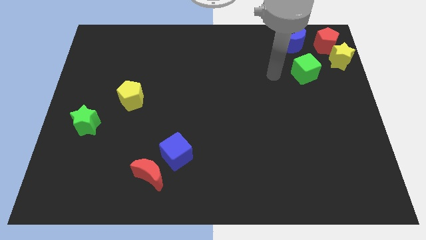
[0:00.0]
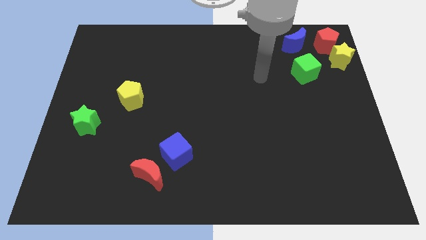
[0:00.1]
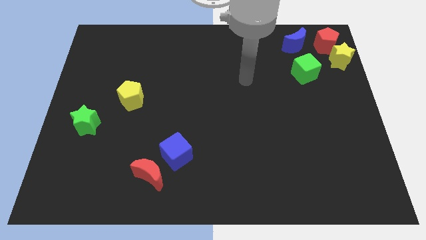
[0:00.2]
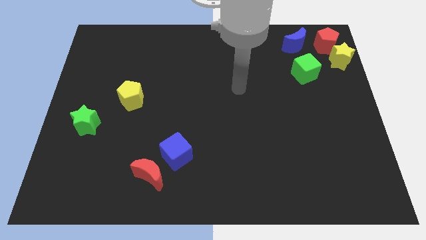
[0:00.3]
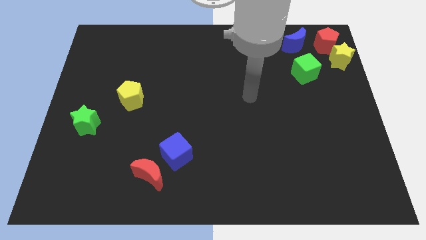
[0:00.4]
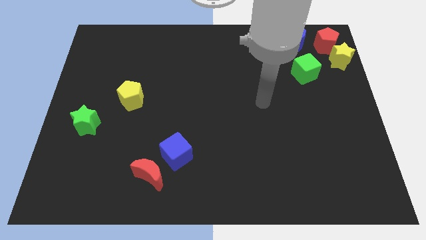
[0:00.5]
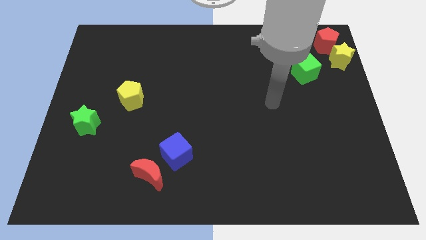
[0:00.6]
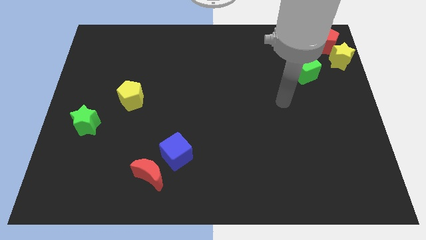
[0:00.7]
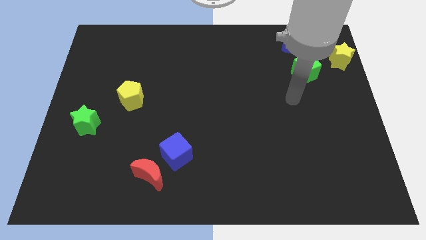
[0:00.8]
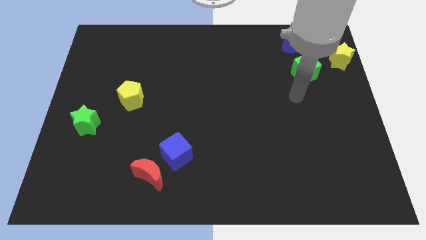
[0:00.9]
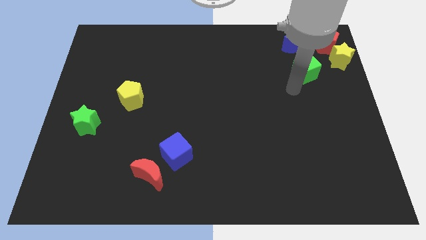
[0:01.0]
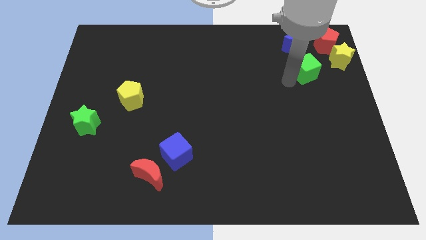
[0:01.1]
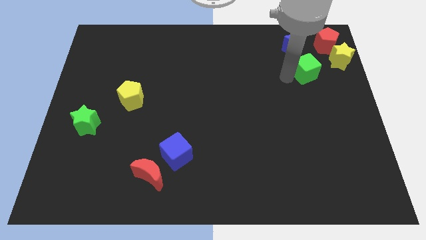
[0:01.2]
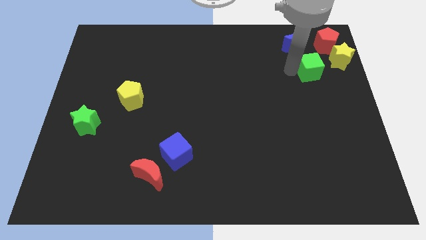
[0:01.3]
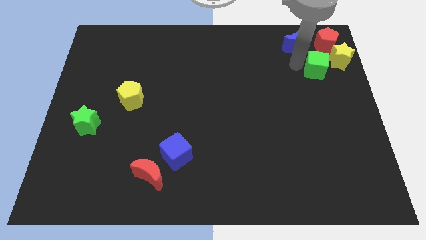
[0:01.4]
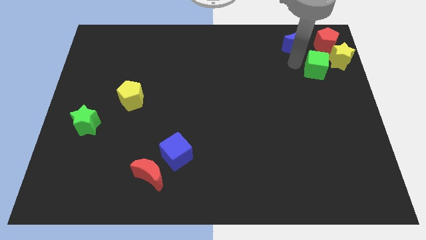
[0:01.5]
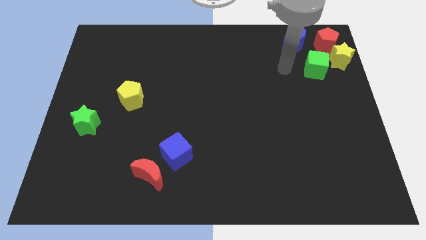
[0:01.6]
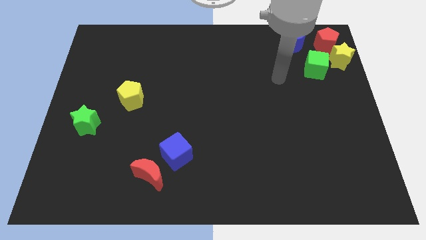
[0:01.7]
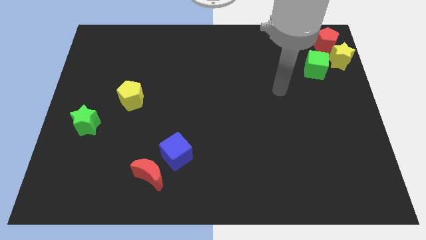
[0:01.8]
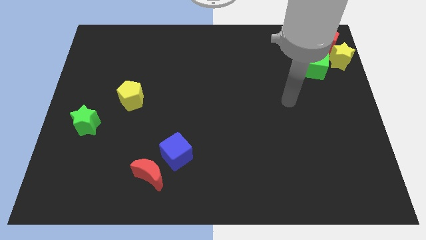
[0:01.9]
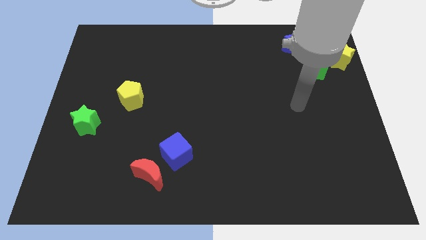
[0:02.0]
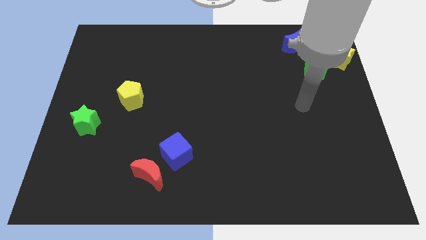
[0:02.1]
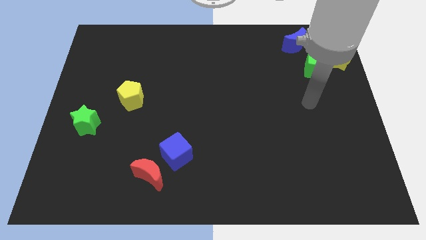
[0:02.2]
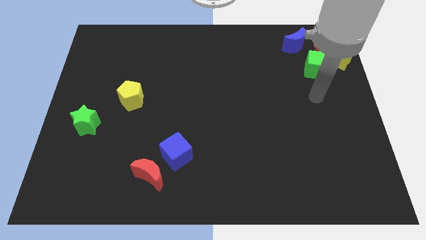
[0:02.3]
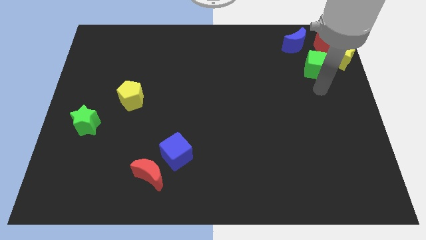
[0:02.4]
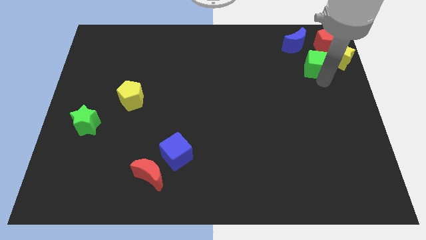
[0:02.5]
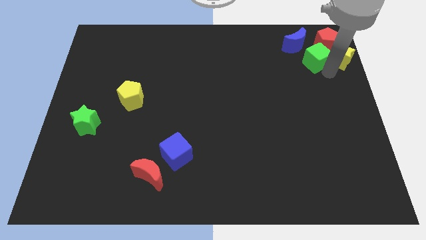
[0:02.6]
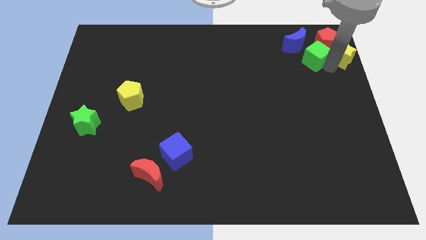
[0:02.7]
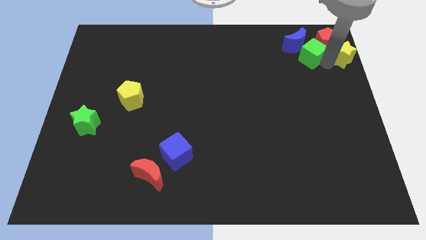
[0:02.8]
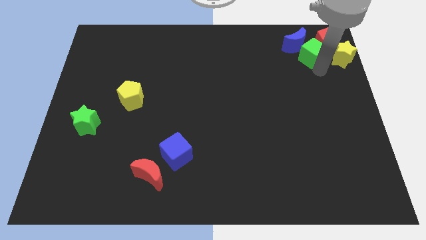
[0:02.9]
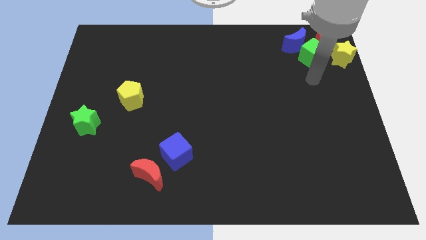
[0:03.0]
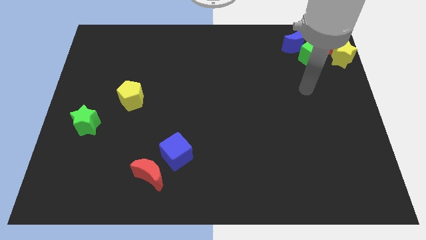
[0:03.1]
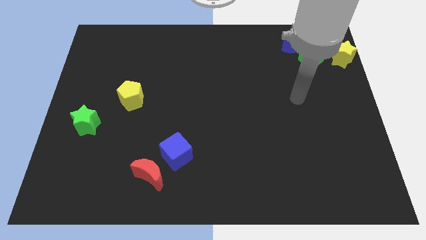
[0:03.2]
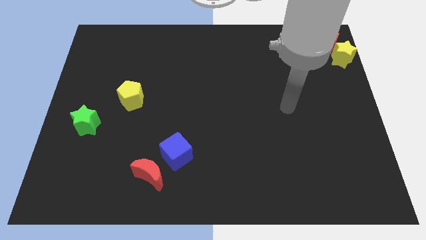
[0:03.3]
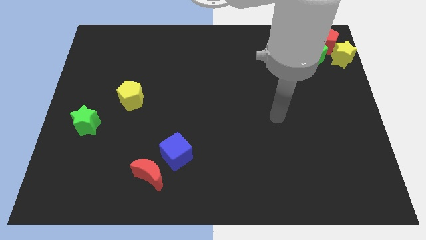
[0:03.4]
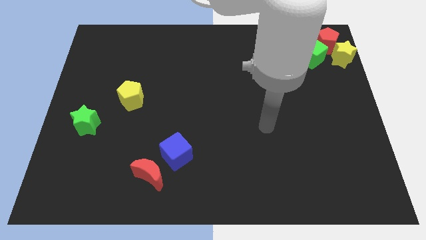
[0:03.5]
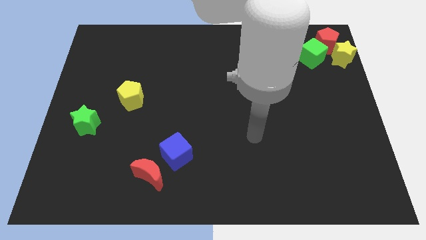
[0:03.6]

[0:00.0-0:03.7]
push the green cube towards the group of blocks at the top right side

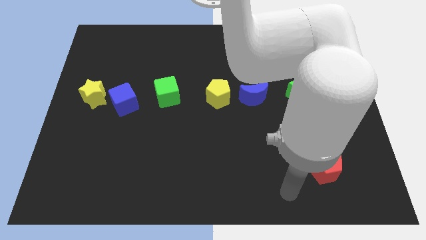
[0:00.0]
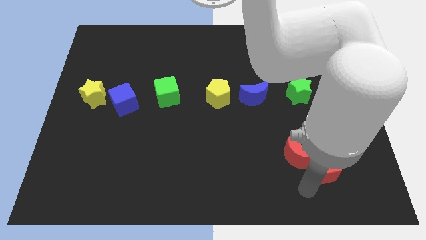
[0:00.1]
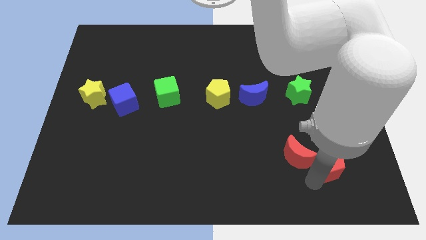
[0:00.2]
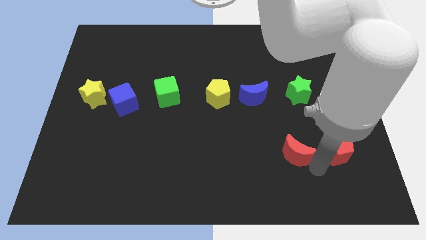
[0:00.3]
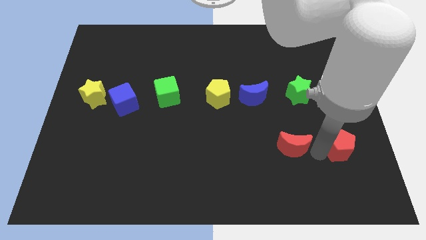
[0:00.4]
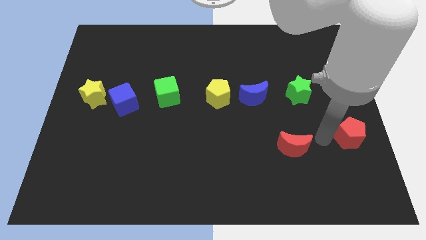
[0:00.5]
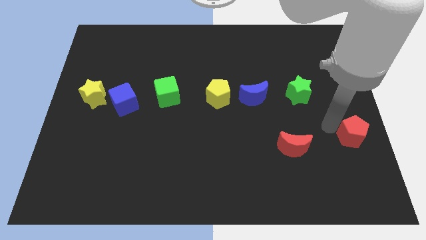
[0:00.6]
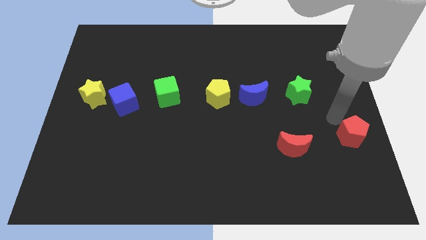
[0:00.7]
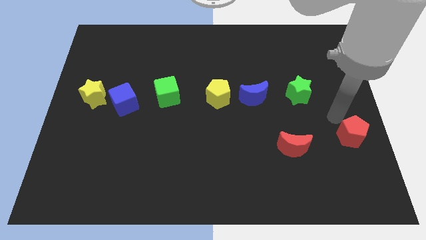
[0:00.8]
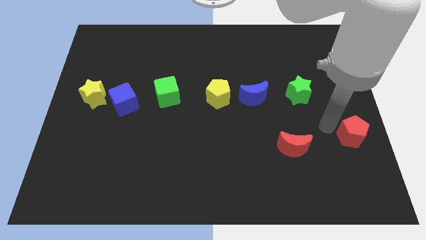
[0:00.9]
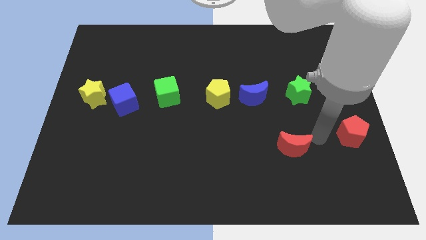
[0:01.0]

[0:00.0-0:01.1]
place your hand in between the red blocks

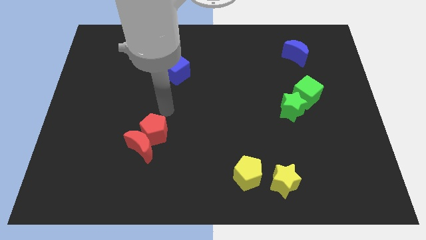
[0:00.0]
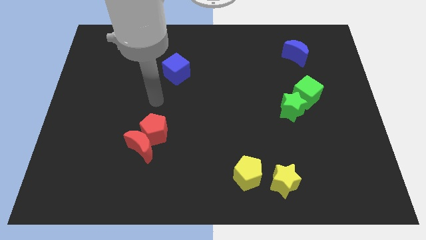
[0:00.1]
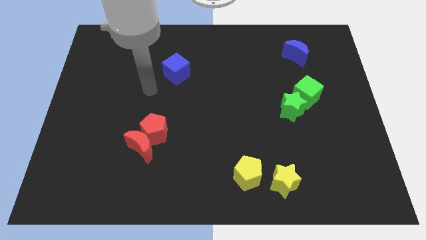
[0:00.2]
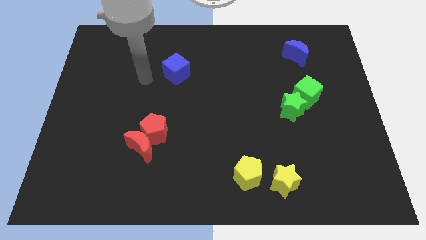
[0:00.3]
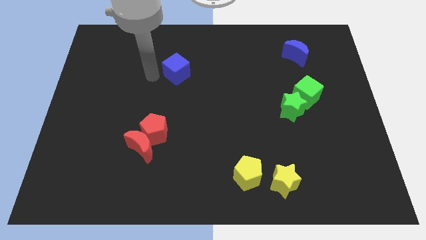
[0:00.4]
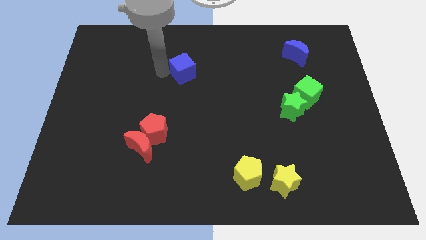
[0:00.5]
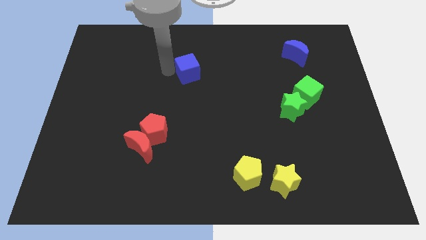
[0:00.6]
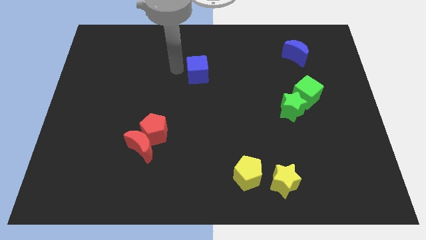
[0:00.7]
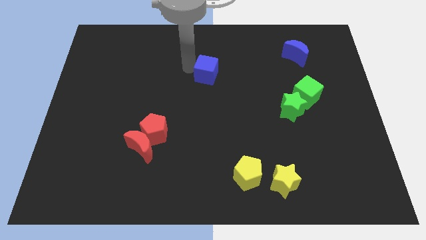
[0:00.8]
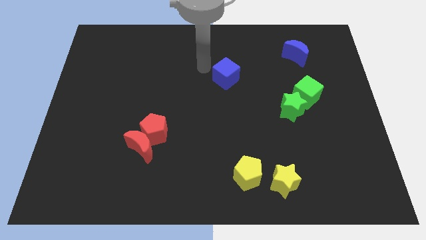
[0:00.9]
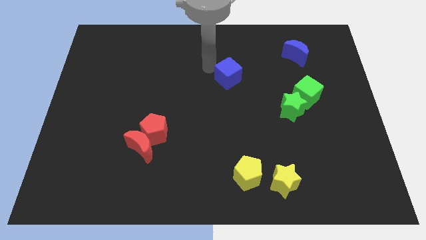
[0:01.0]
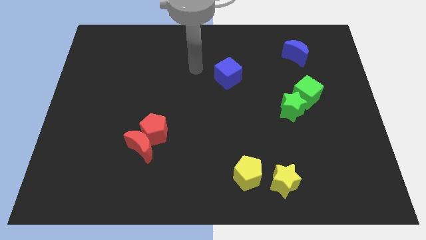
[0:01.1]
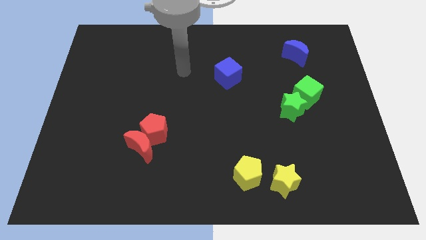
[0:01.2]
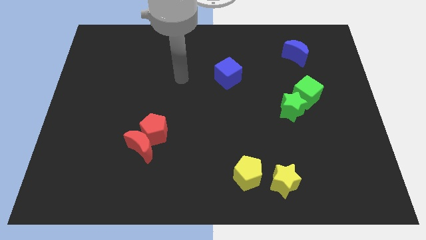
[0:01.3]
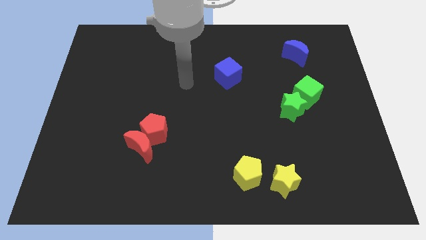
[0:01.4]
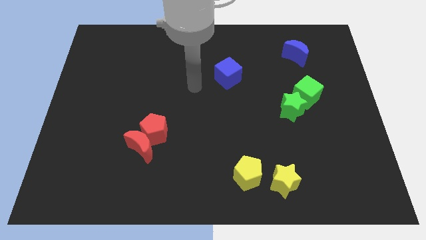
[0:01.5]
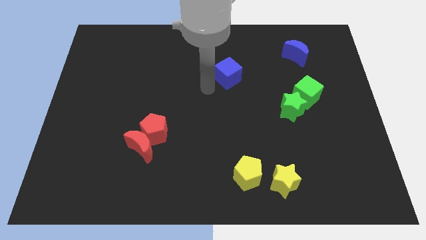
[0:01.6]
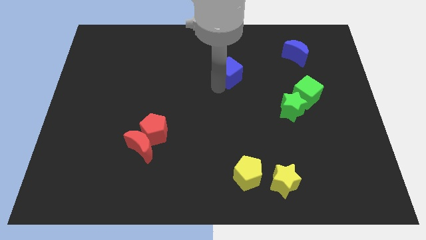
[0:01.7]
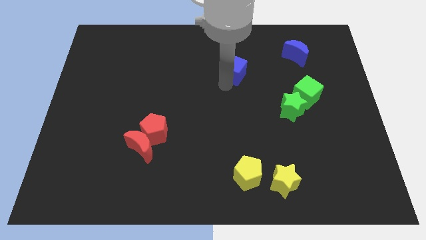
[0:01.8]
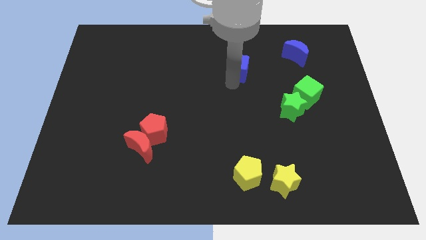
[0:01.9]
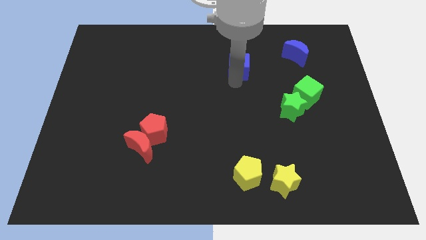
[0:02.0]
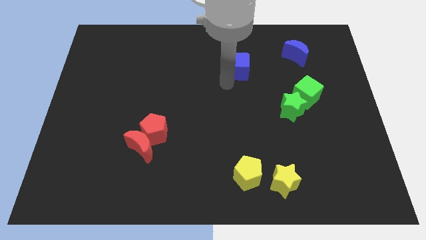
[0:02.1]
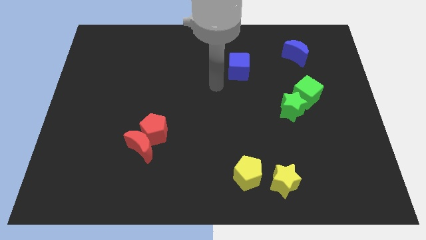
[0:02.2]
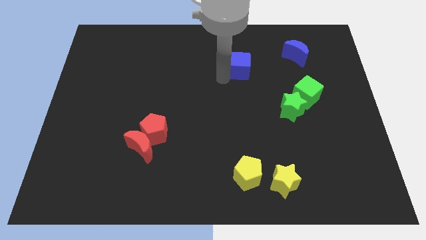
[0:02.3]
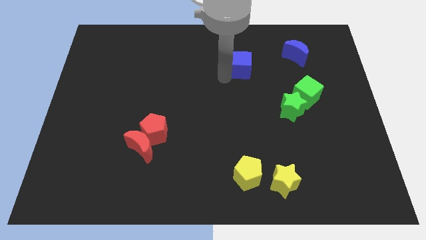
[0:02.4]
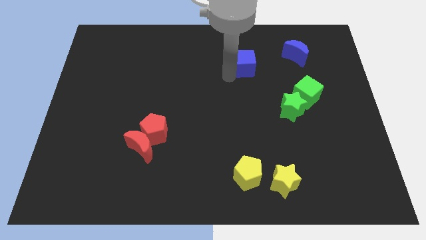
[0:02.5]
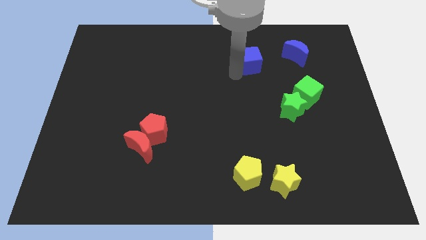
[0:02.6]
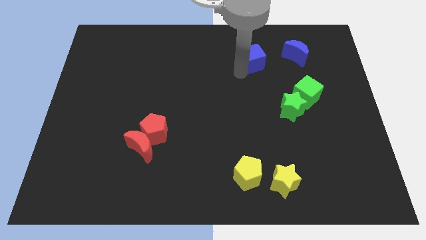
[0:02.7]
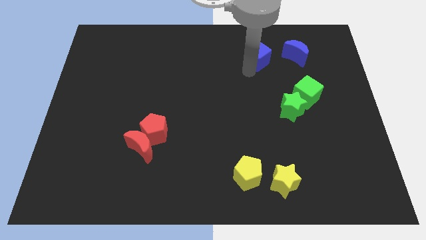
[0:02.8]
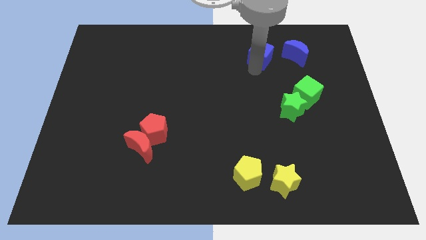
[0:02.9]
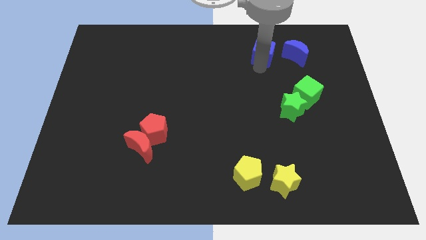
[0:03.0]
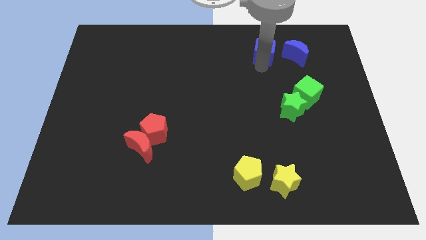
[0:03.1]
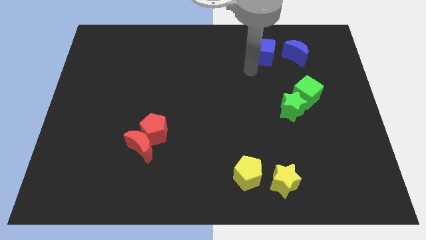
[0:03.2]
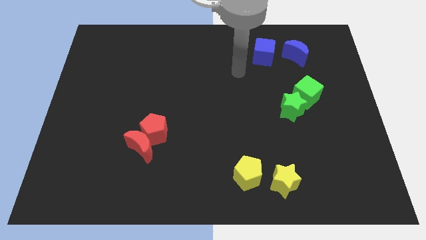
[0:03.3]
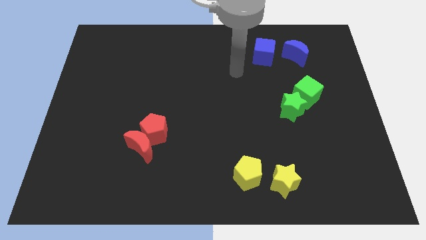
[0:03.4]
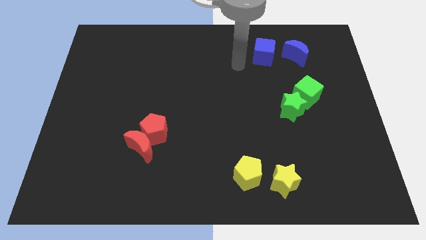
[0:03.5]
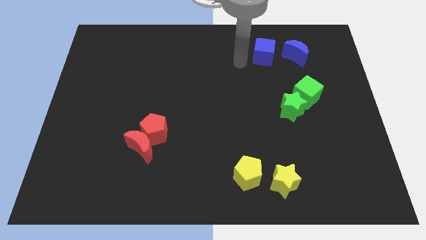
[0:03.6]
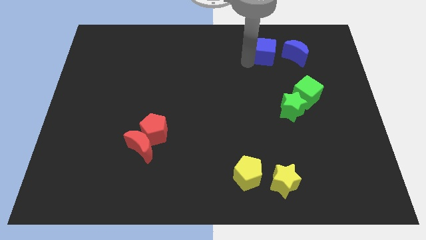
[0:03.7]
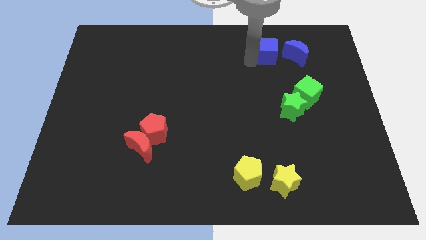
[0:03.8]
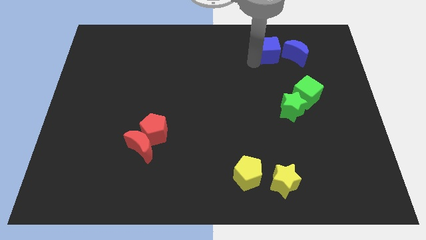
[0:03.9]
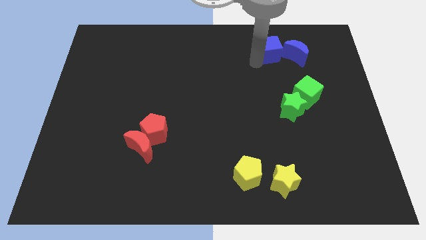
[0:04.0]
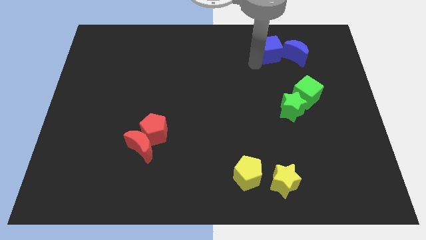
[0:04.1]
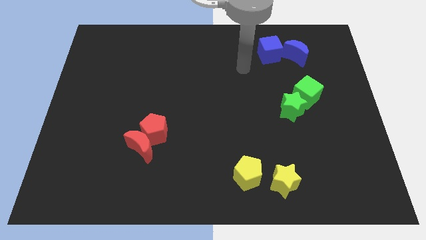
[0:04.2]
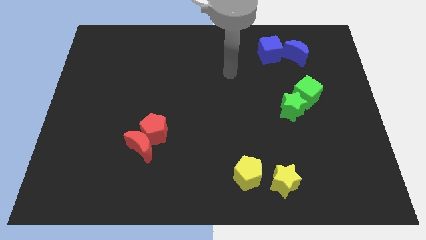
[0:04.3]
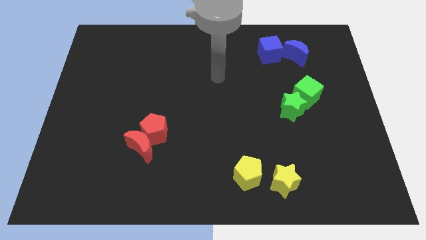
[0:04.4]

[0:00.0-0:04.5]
move the blue cube into blue moon
